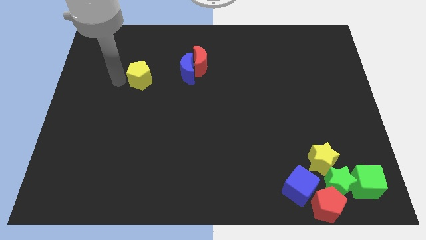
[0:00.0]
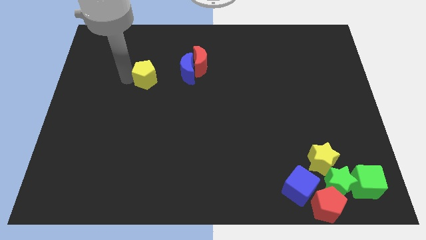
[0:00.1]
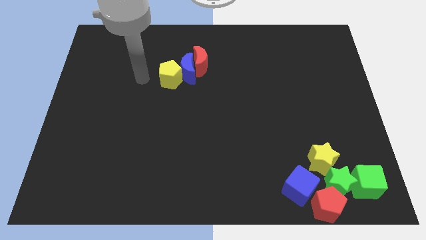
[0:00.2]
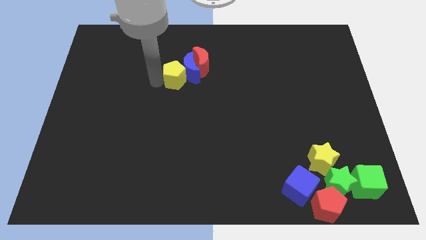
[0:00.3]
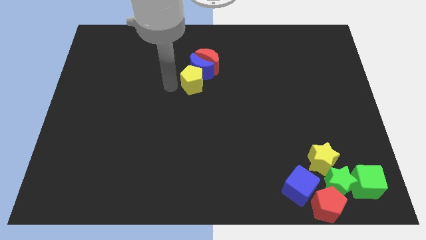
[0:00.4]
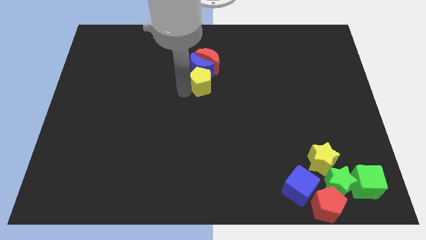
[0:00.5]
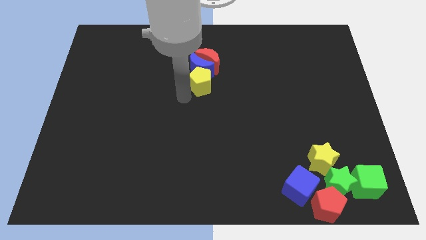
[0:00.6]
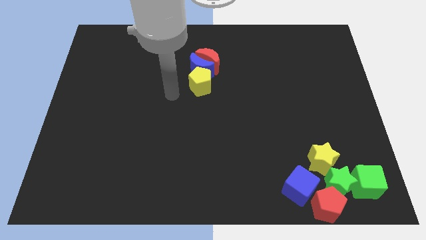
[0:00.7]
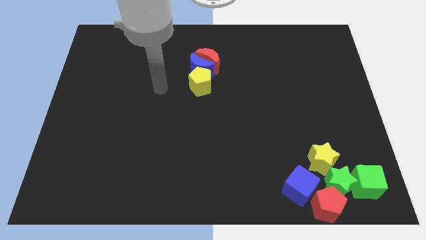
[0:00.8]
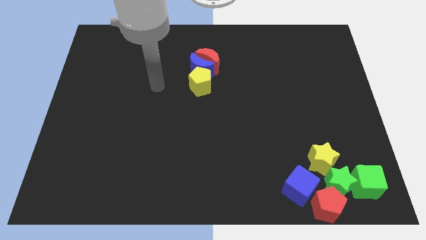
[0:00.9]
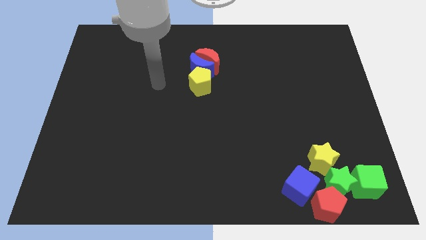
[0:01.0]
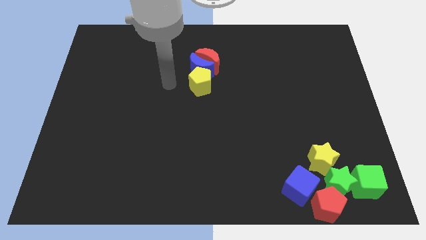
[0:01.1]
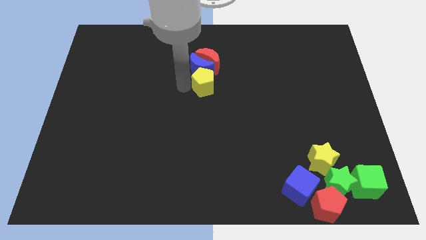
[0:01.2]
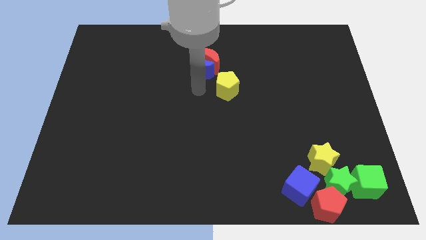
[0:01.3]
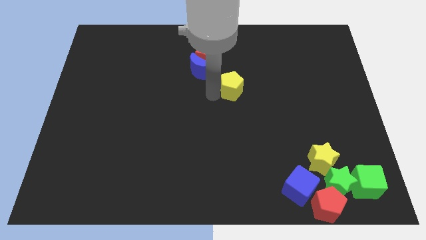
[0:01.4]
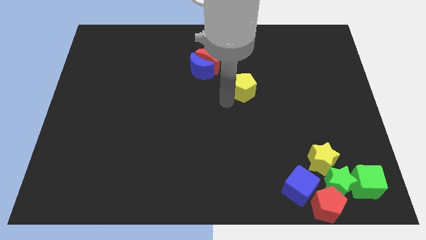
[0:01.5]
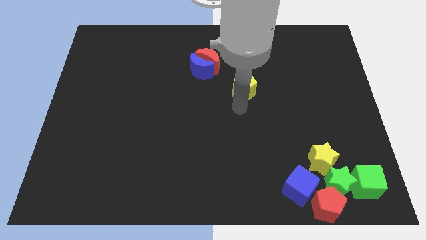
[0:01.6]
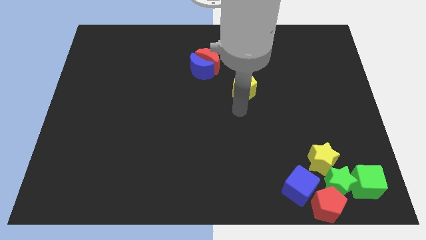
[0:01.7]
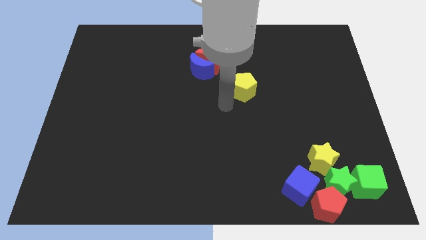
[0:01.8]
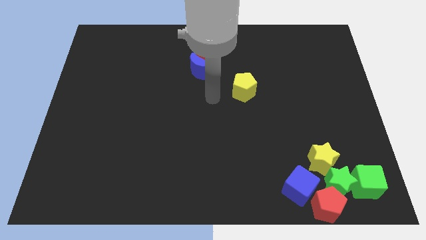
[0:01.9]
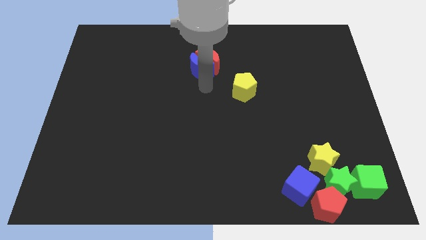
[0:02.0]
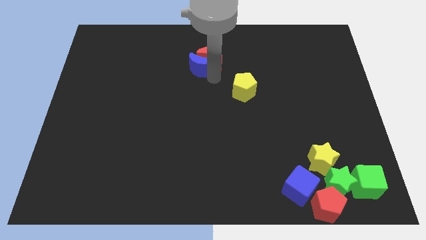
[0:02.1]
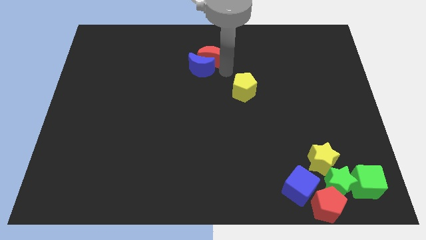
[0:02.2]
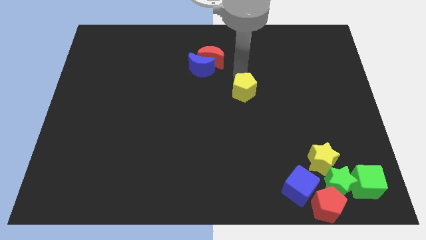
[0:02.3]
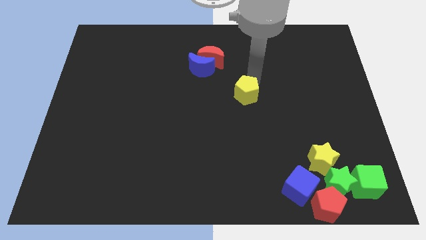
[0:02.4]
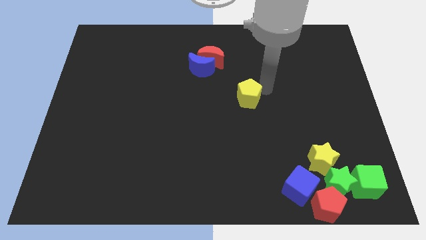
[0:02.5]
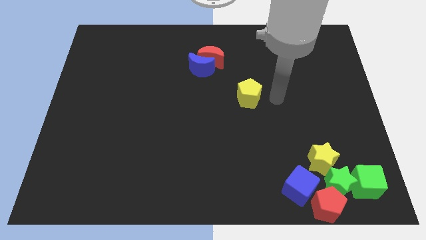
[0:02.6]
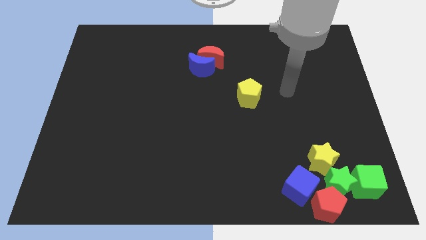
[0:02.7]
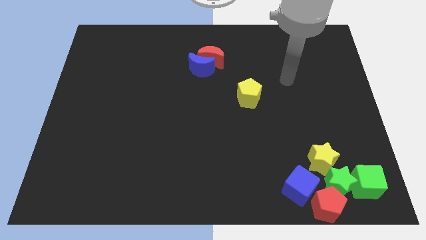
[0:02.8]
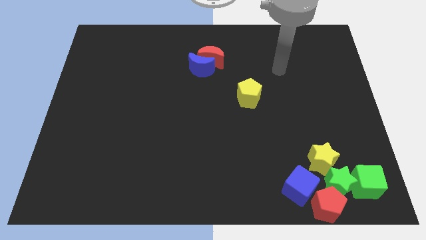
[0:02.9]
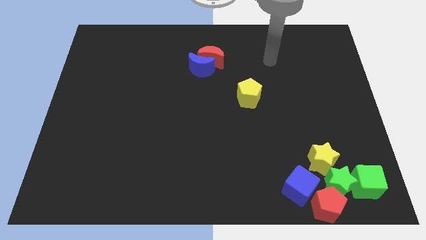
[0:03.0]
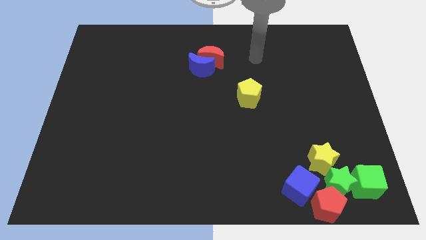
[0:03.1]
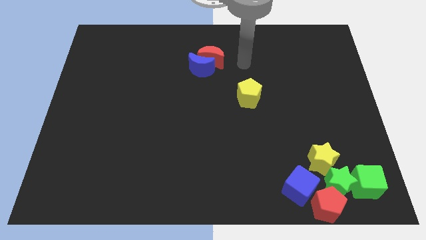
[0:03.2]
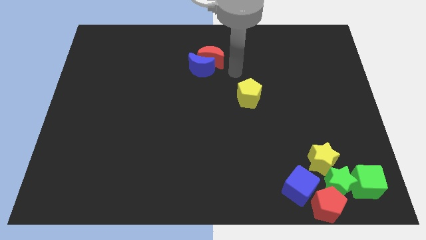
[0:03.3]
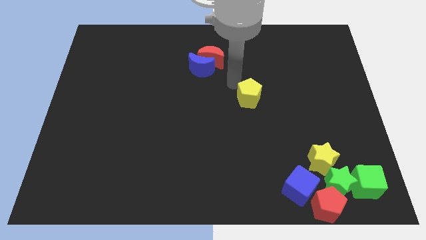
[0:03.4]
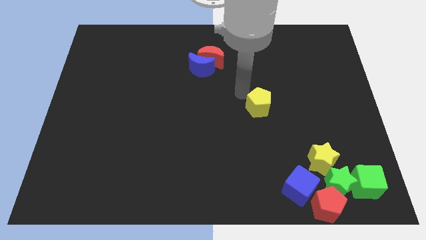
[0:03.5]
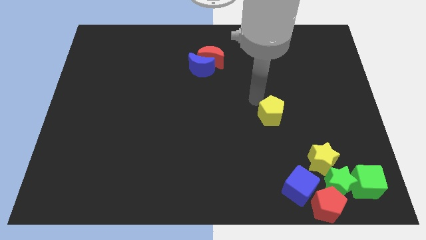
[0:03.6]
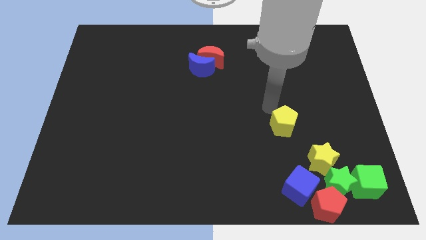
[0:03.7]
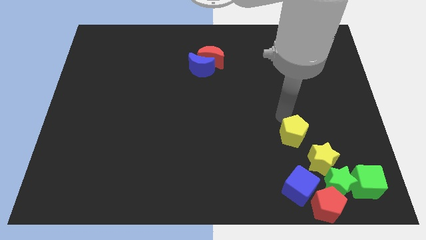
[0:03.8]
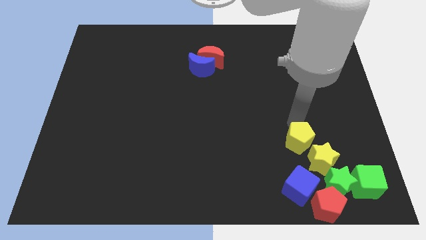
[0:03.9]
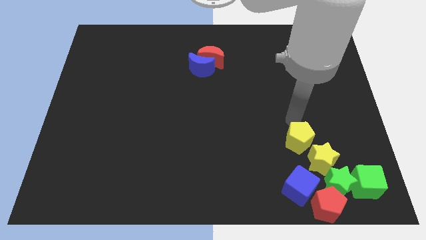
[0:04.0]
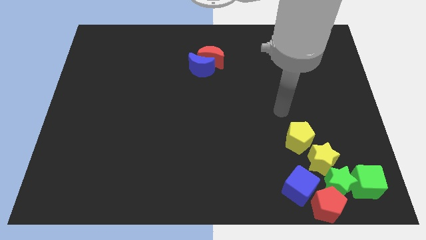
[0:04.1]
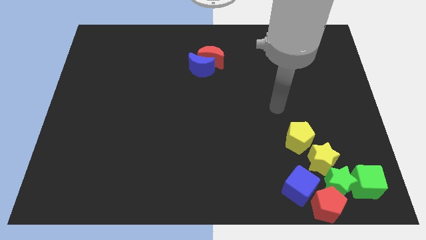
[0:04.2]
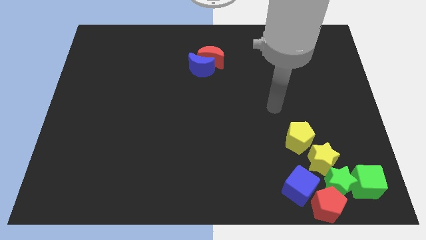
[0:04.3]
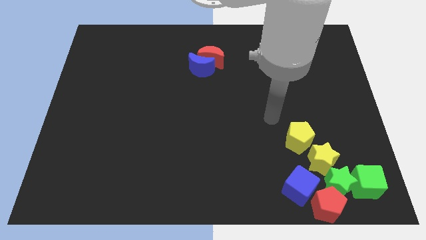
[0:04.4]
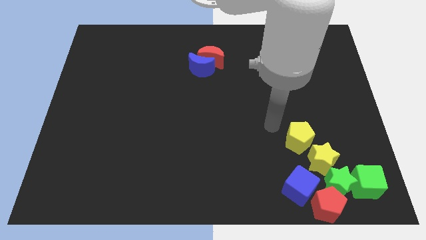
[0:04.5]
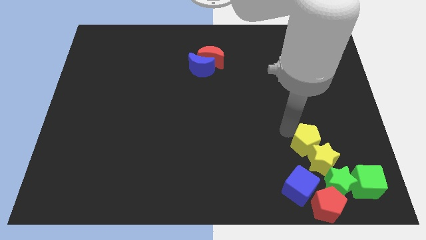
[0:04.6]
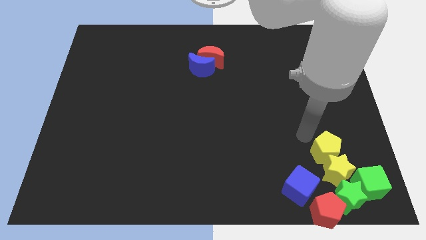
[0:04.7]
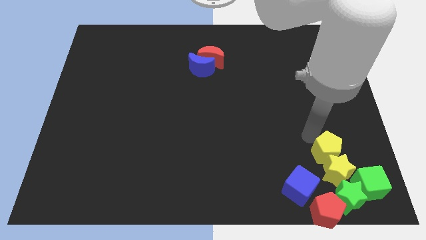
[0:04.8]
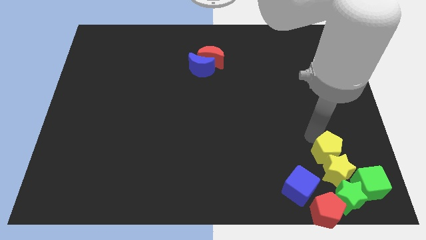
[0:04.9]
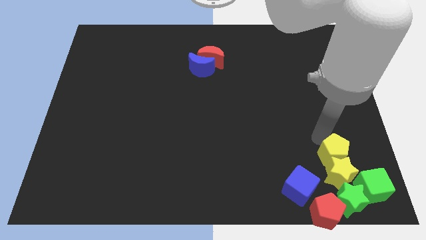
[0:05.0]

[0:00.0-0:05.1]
push the yellow pentagon above the yellow star

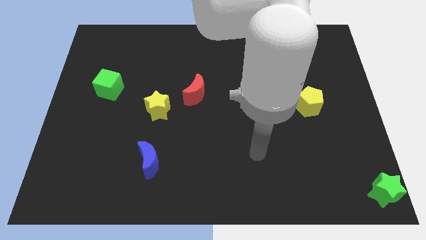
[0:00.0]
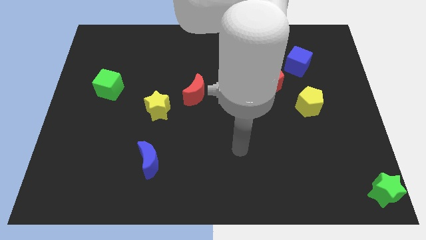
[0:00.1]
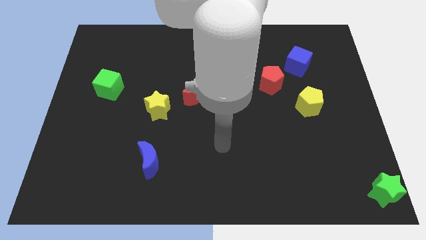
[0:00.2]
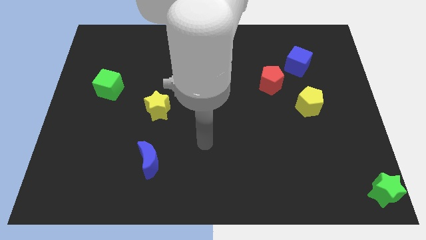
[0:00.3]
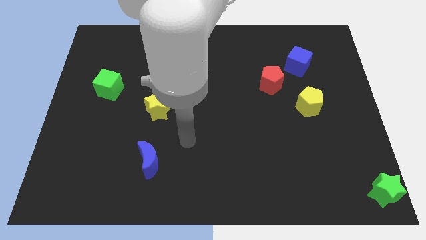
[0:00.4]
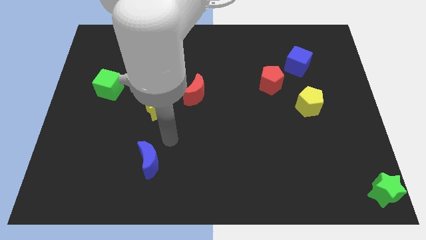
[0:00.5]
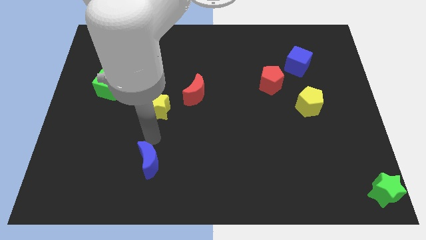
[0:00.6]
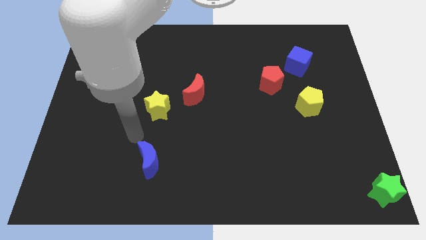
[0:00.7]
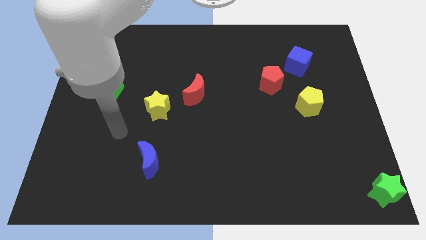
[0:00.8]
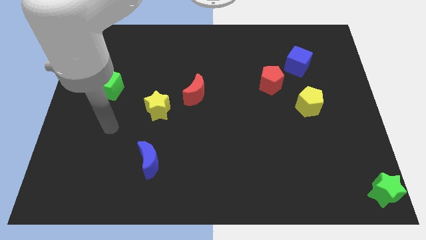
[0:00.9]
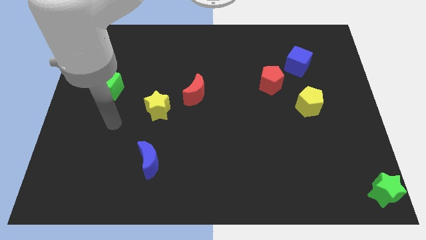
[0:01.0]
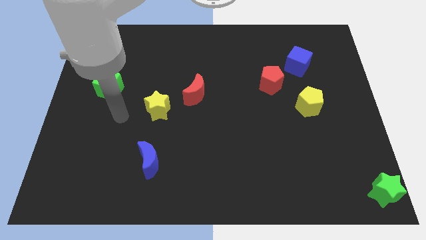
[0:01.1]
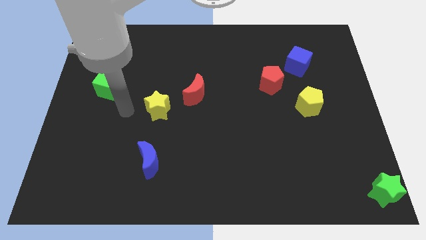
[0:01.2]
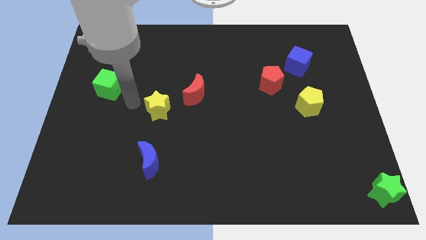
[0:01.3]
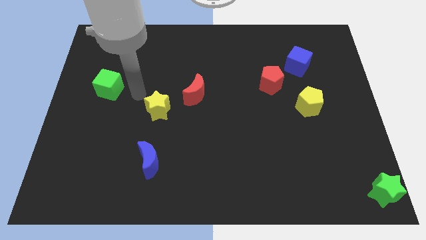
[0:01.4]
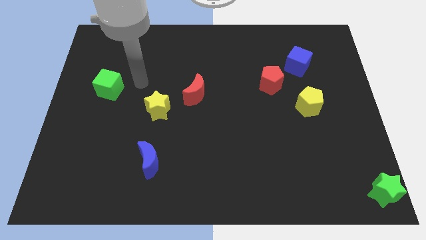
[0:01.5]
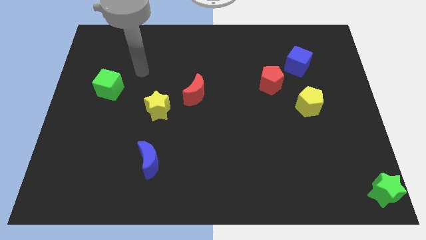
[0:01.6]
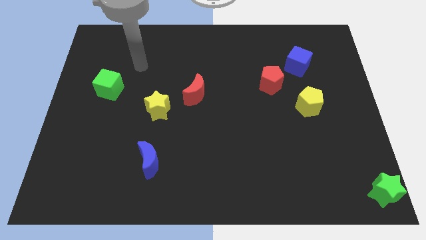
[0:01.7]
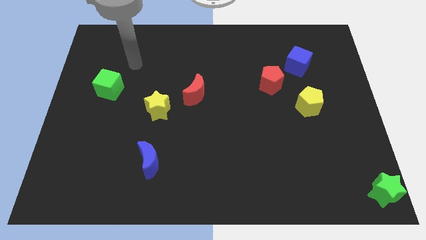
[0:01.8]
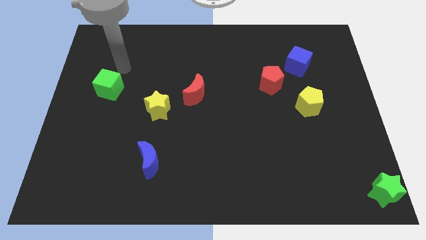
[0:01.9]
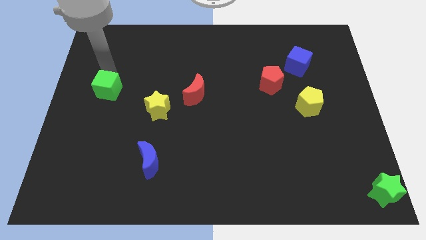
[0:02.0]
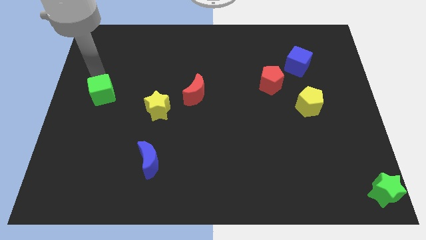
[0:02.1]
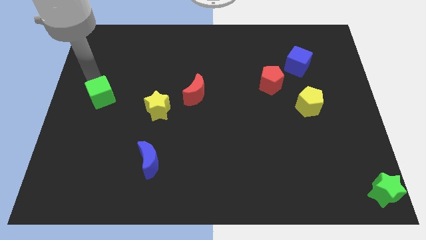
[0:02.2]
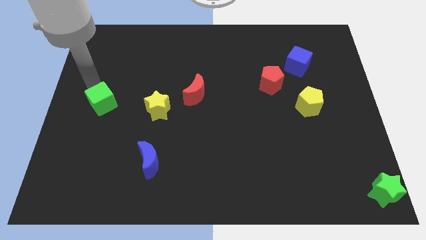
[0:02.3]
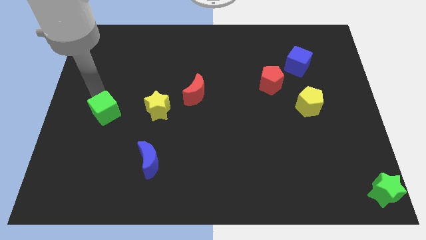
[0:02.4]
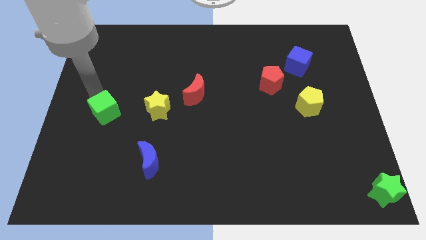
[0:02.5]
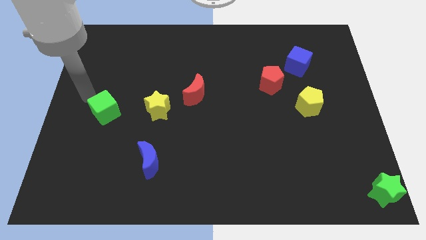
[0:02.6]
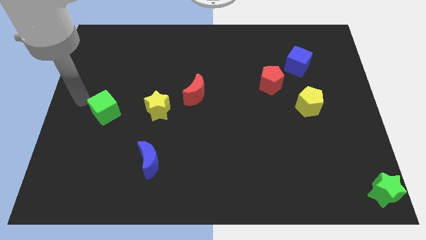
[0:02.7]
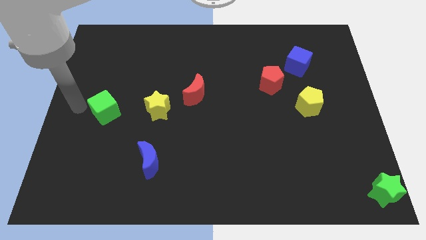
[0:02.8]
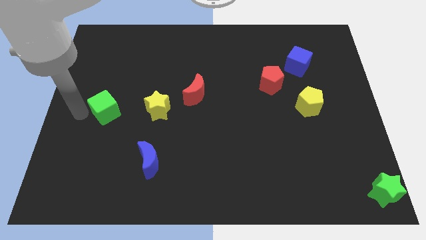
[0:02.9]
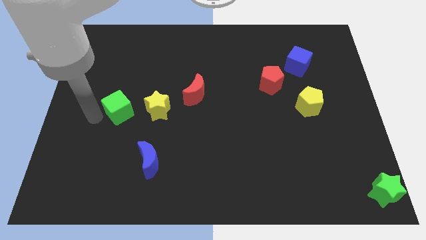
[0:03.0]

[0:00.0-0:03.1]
move the green cube slightly left to the yellow star

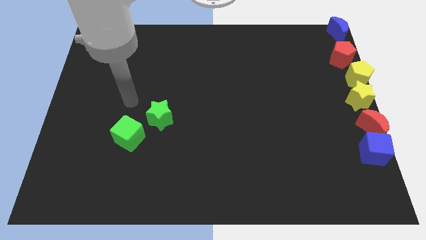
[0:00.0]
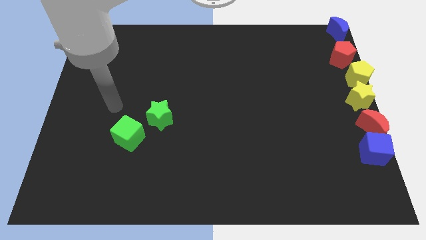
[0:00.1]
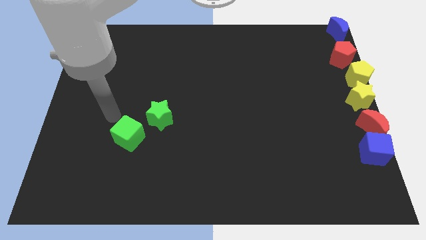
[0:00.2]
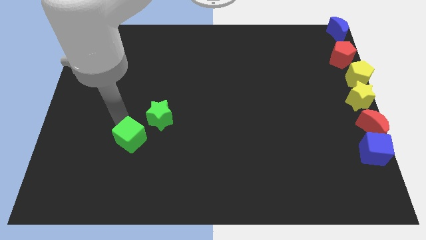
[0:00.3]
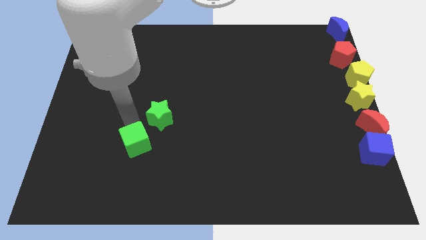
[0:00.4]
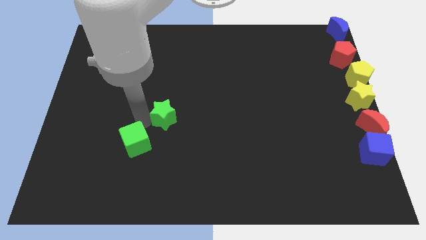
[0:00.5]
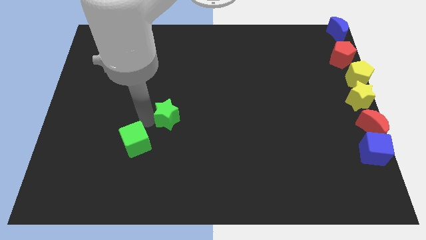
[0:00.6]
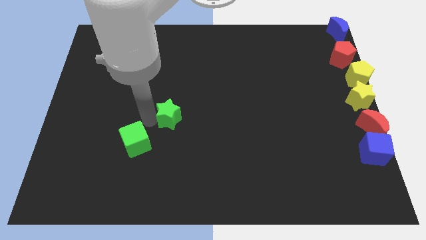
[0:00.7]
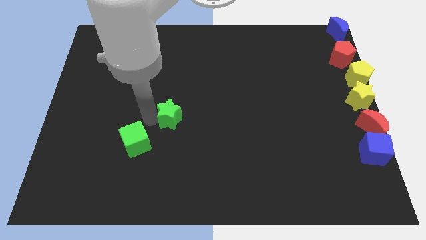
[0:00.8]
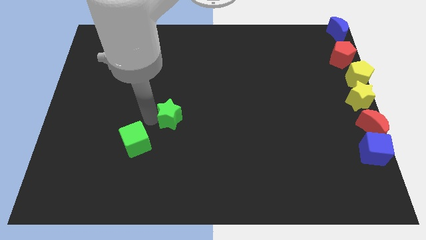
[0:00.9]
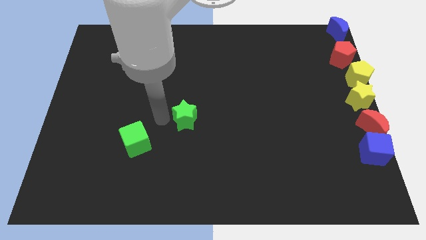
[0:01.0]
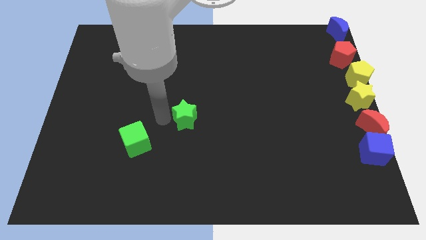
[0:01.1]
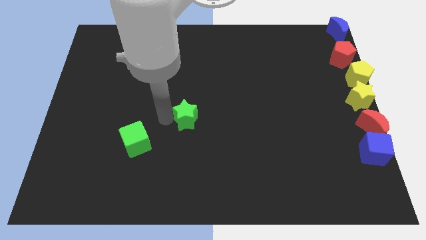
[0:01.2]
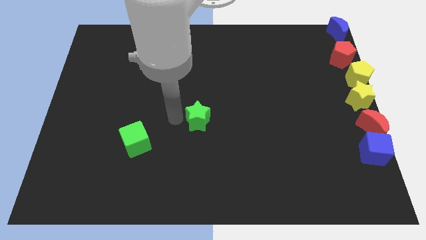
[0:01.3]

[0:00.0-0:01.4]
push the green star to the right of the board
